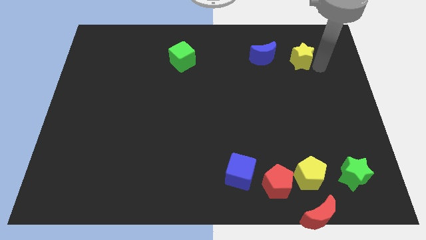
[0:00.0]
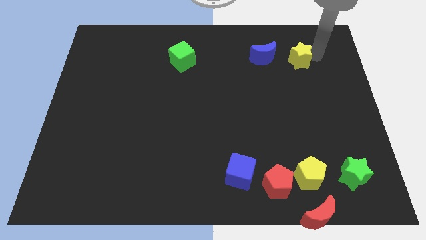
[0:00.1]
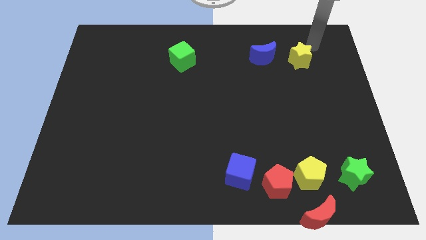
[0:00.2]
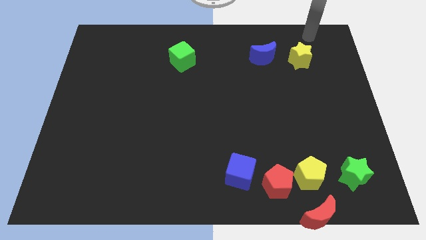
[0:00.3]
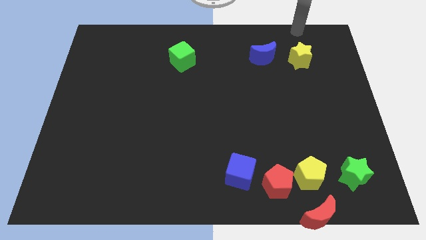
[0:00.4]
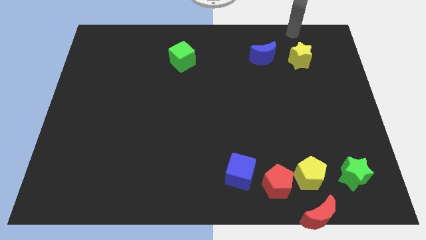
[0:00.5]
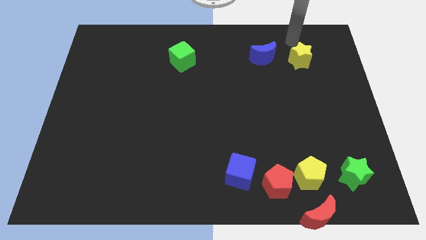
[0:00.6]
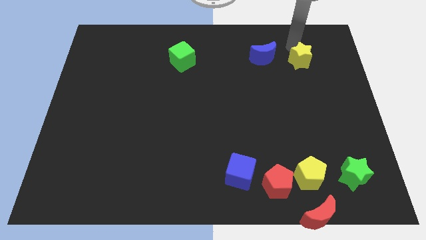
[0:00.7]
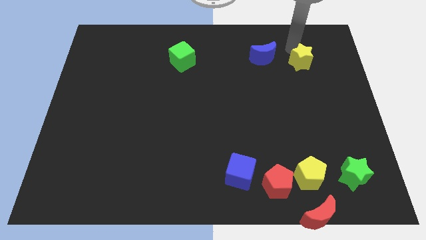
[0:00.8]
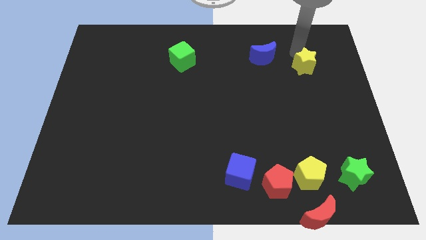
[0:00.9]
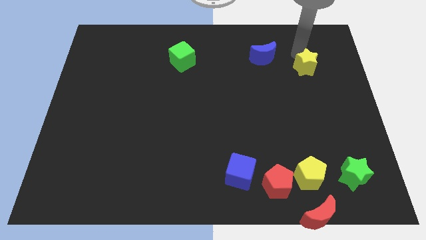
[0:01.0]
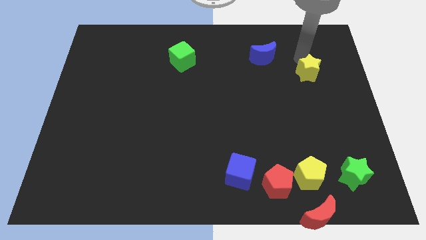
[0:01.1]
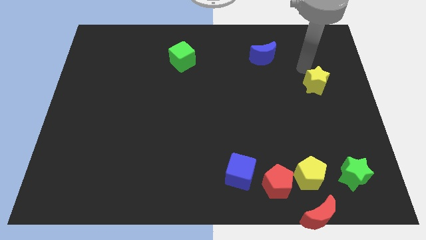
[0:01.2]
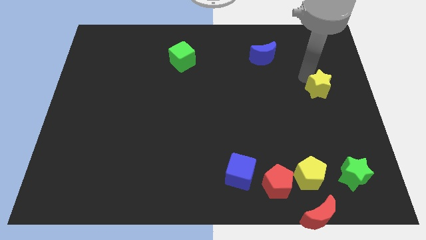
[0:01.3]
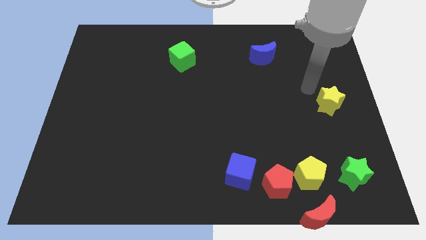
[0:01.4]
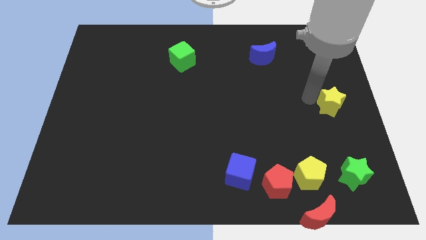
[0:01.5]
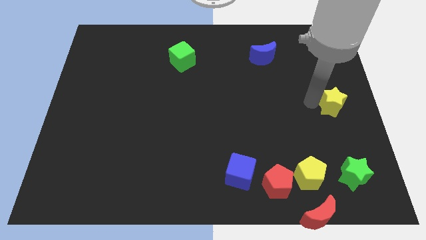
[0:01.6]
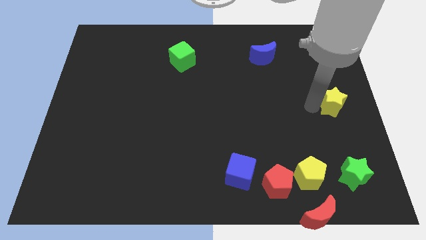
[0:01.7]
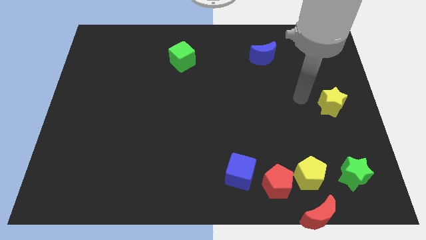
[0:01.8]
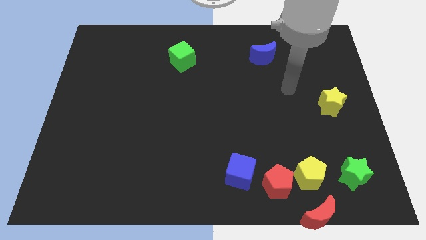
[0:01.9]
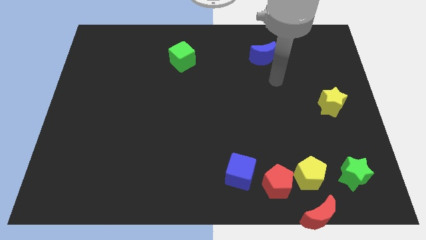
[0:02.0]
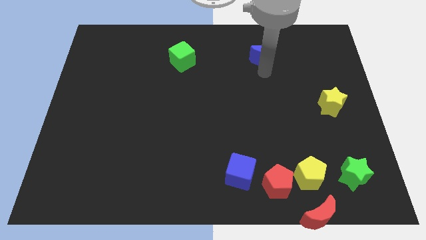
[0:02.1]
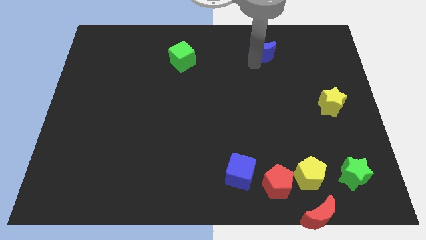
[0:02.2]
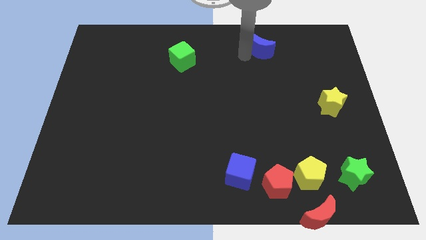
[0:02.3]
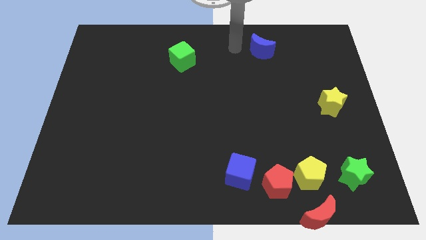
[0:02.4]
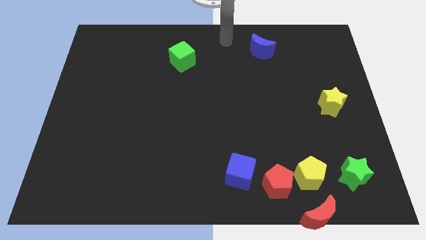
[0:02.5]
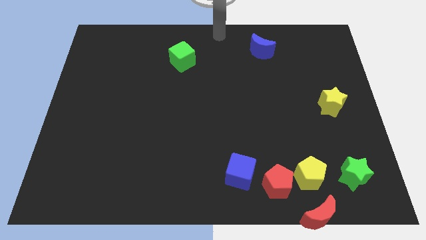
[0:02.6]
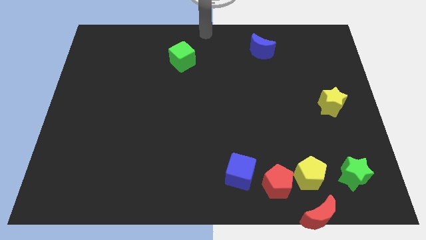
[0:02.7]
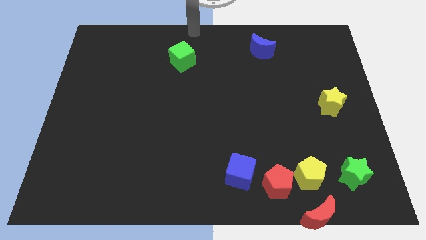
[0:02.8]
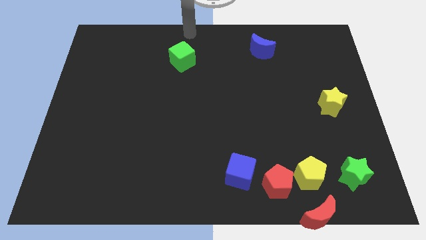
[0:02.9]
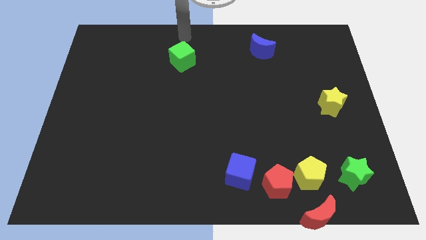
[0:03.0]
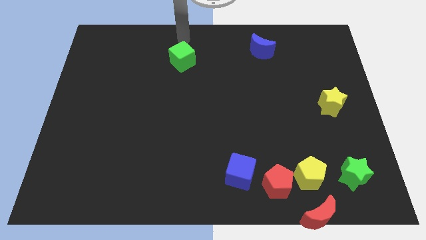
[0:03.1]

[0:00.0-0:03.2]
push the yellow star towards the green star

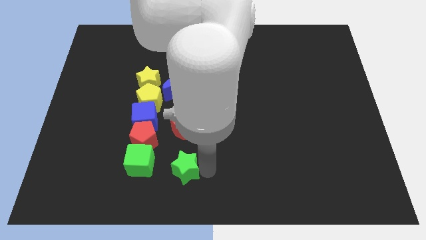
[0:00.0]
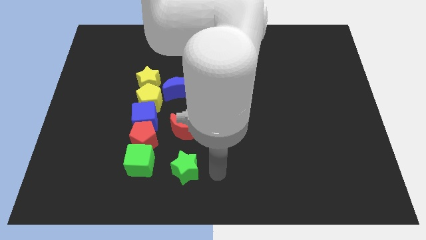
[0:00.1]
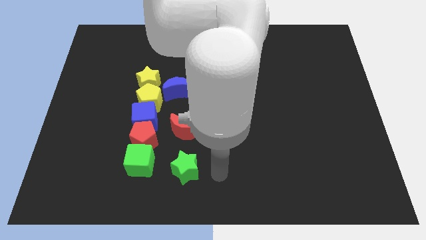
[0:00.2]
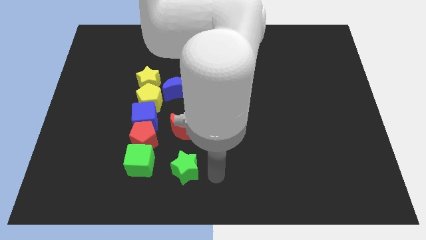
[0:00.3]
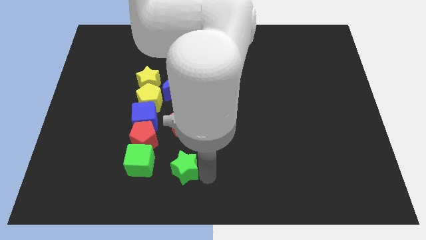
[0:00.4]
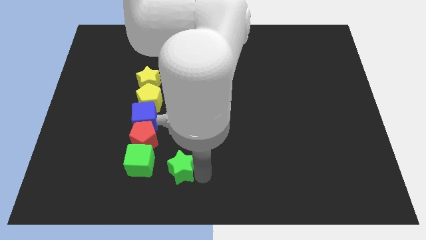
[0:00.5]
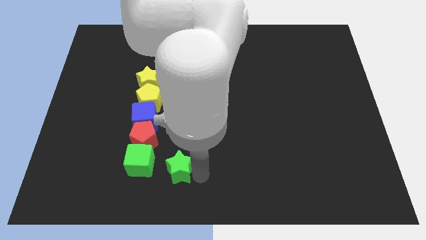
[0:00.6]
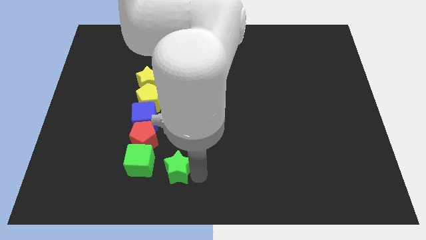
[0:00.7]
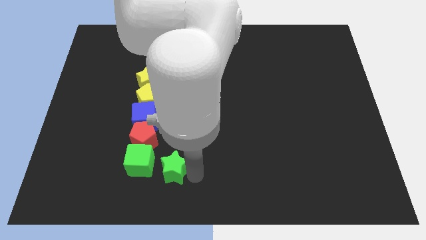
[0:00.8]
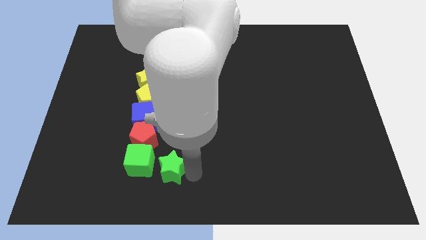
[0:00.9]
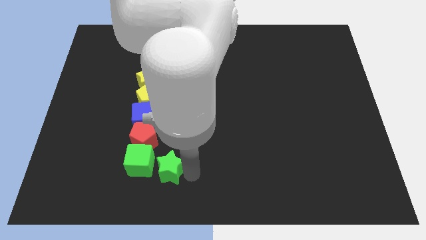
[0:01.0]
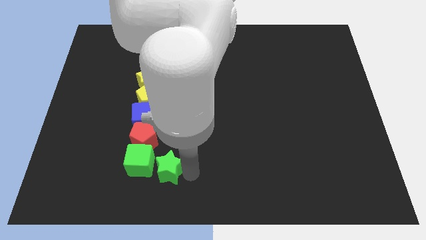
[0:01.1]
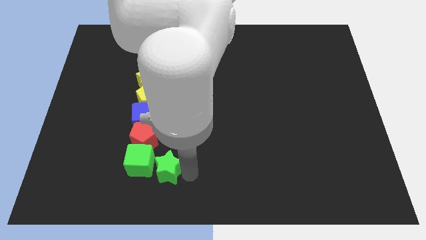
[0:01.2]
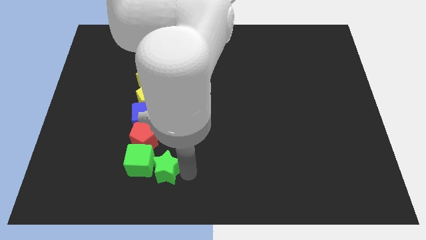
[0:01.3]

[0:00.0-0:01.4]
place green star right to the green cube

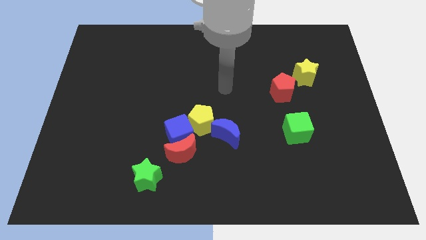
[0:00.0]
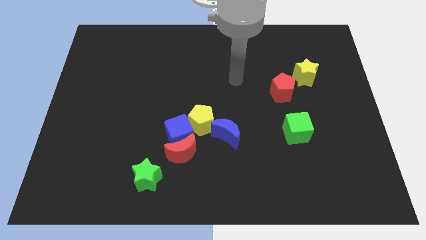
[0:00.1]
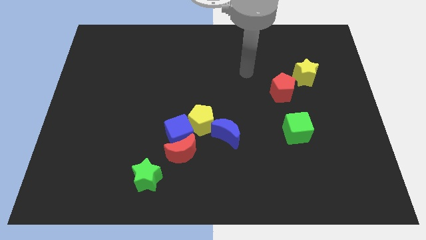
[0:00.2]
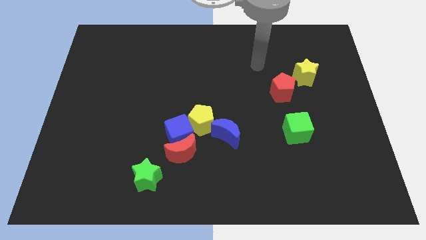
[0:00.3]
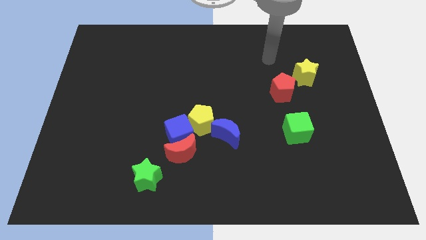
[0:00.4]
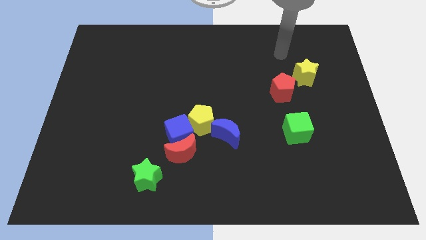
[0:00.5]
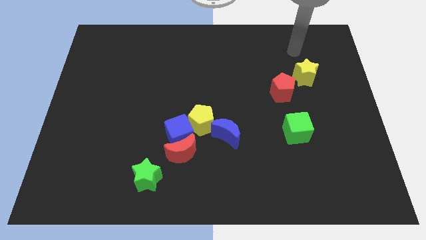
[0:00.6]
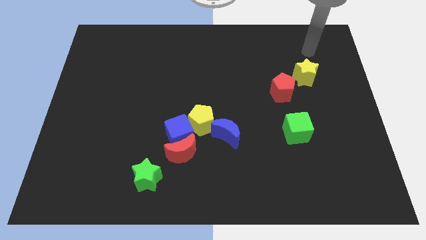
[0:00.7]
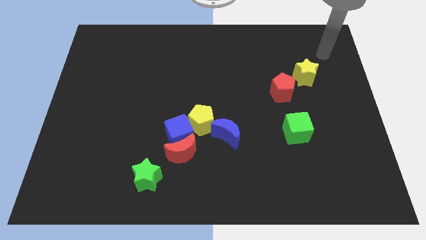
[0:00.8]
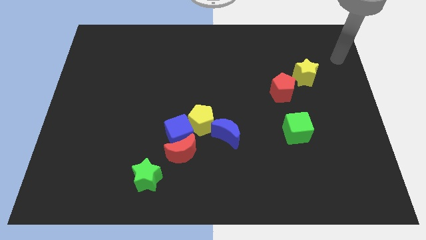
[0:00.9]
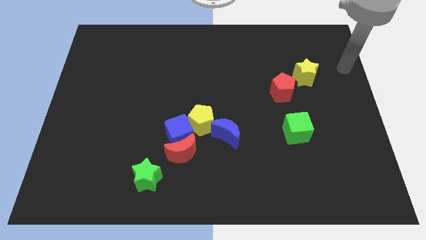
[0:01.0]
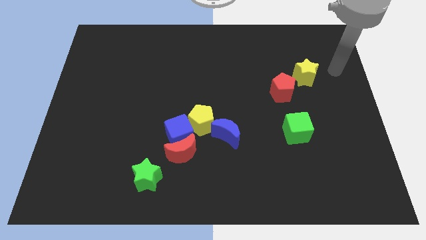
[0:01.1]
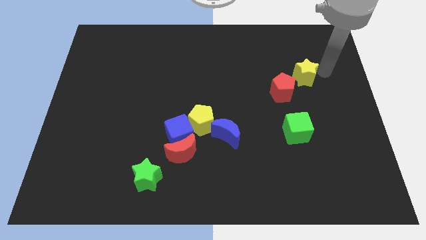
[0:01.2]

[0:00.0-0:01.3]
place your arm to the right of the yellow star

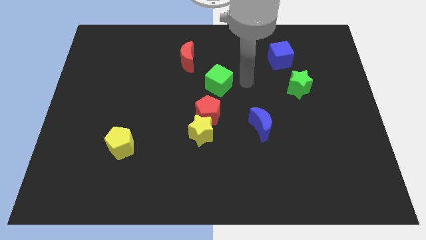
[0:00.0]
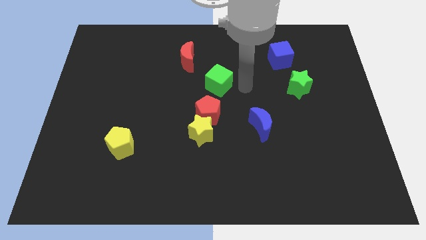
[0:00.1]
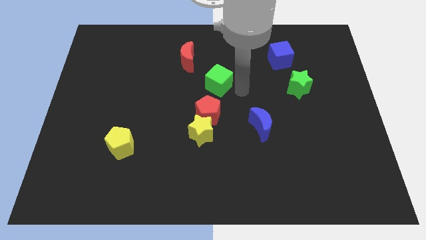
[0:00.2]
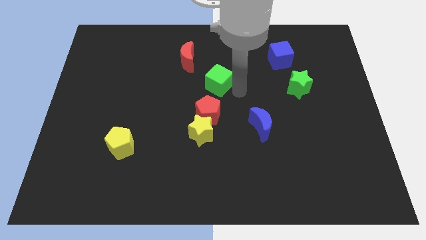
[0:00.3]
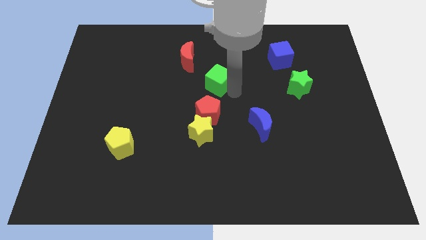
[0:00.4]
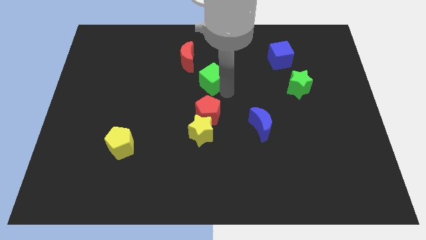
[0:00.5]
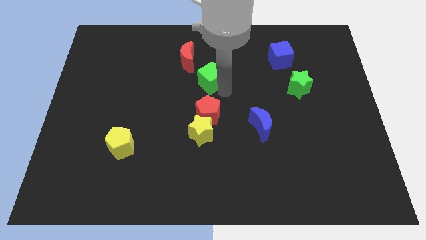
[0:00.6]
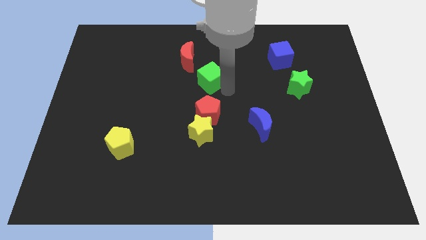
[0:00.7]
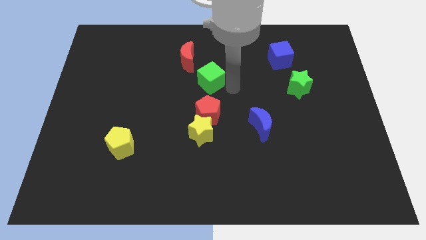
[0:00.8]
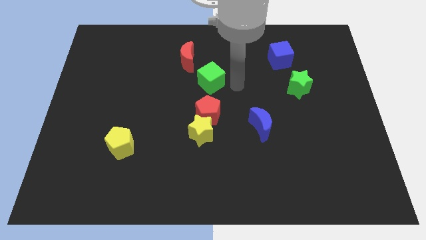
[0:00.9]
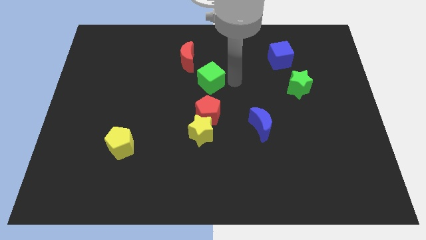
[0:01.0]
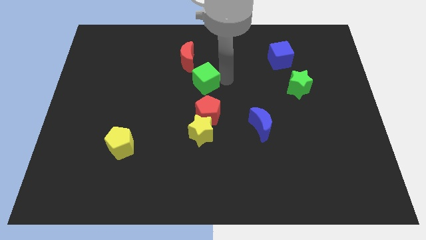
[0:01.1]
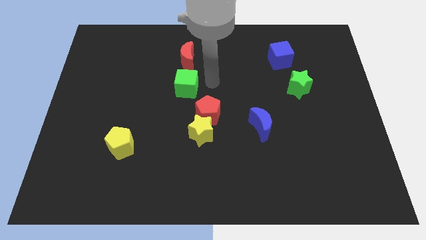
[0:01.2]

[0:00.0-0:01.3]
move the green green cube under the red crescent

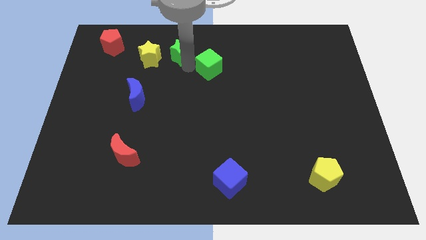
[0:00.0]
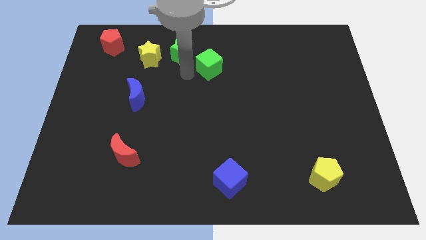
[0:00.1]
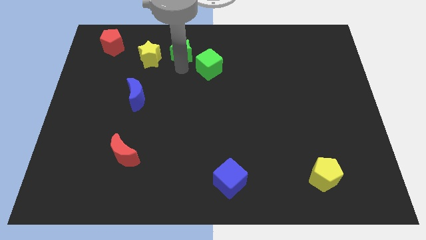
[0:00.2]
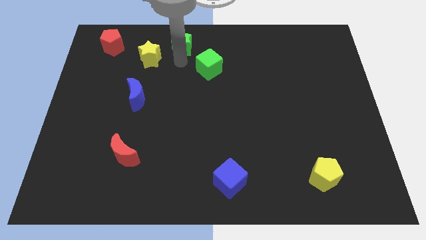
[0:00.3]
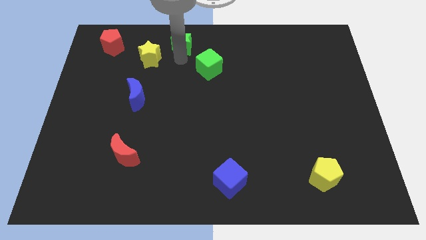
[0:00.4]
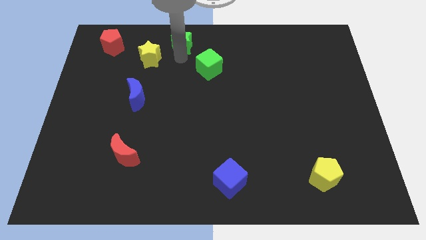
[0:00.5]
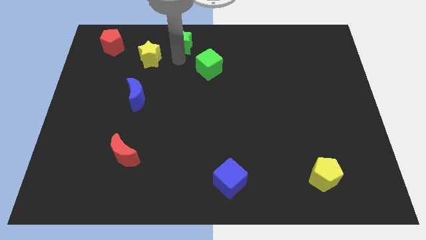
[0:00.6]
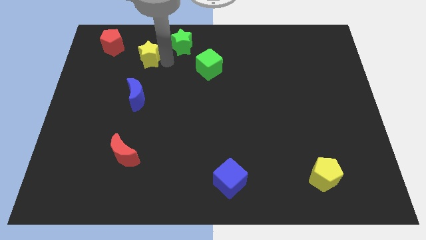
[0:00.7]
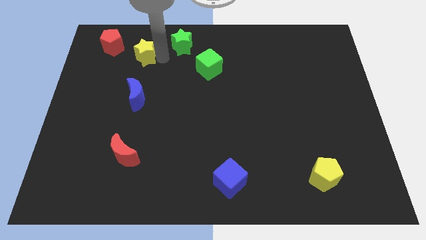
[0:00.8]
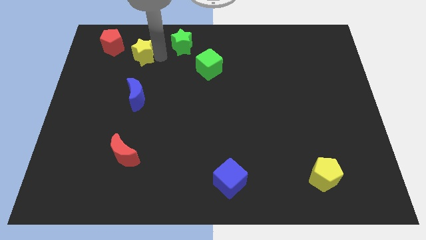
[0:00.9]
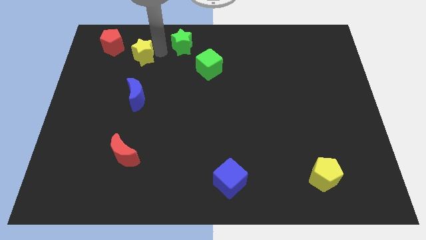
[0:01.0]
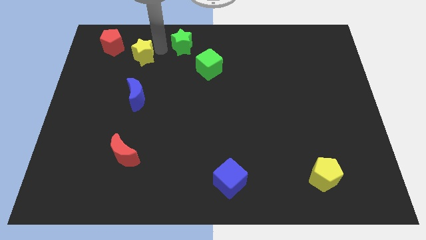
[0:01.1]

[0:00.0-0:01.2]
push the green star away from the green cube

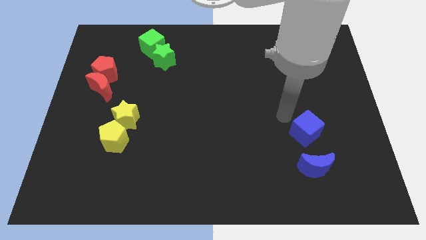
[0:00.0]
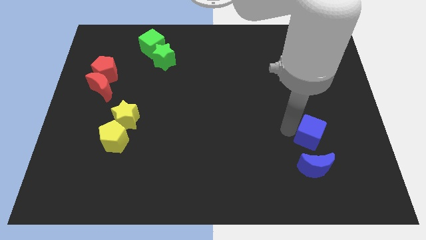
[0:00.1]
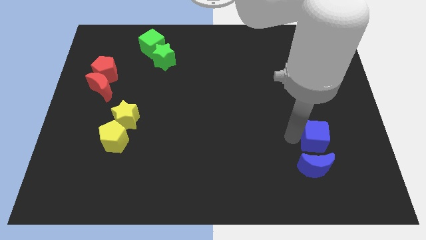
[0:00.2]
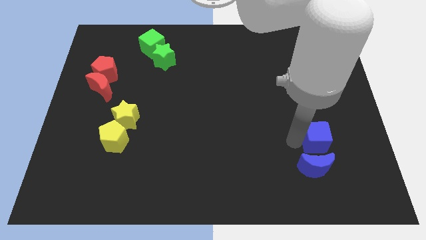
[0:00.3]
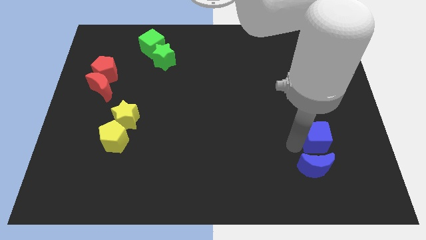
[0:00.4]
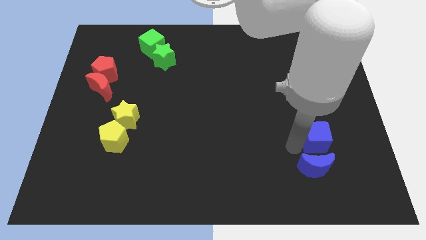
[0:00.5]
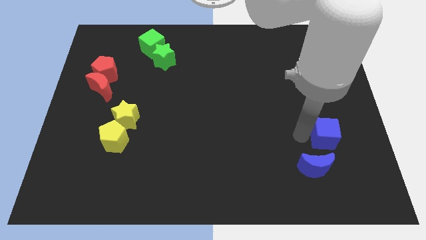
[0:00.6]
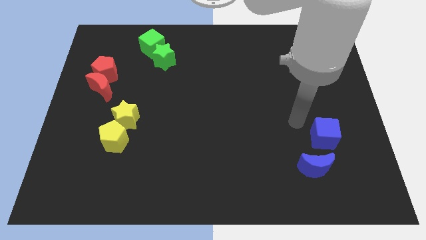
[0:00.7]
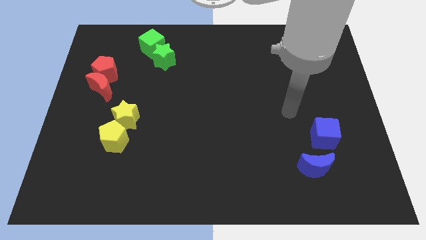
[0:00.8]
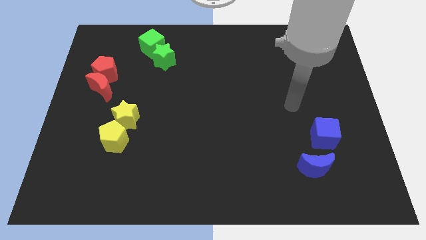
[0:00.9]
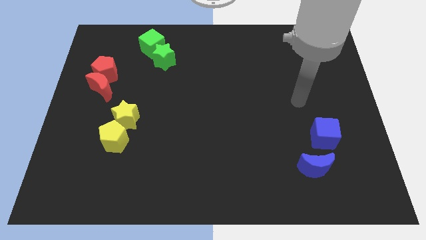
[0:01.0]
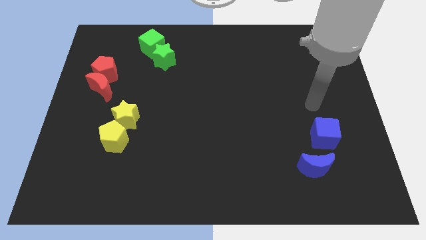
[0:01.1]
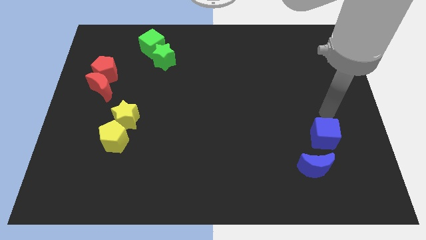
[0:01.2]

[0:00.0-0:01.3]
move the blue cube slightly towards to the blue moon
